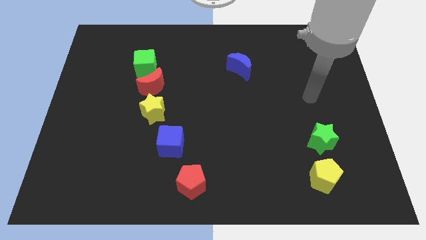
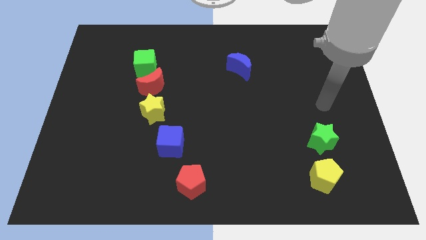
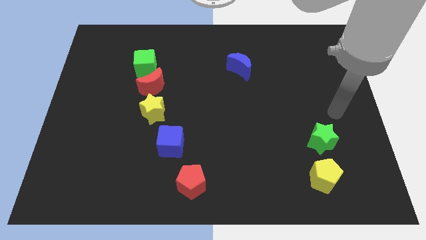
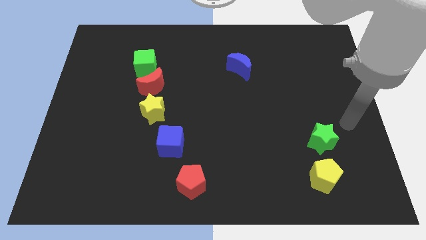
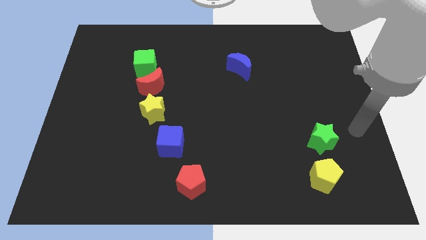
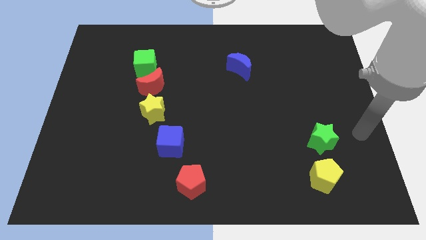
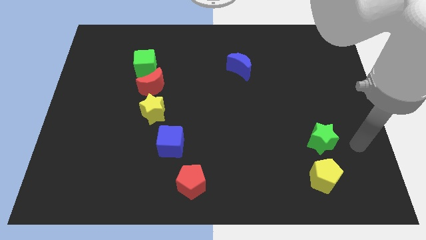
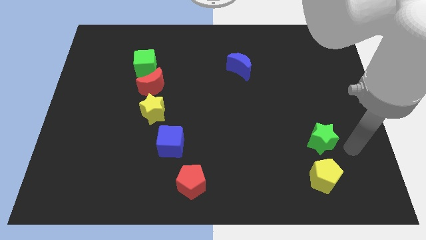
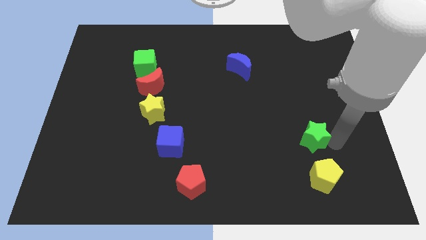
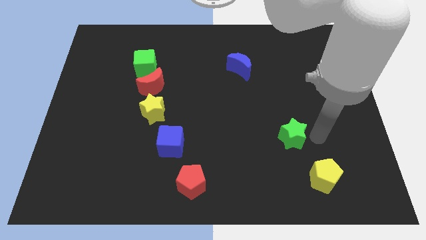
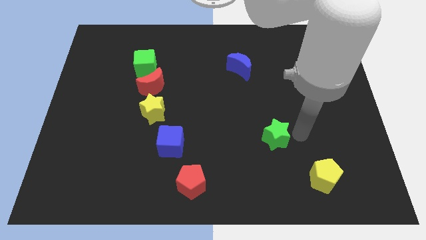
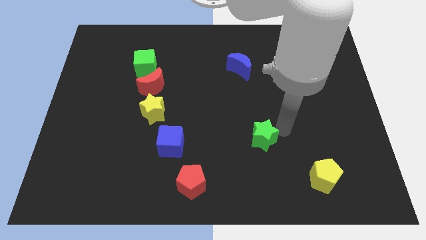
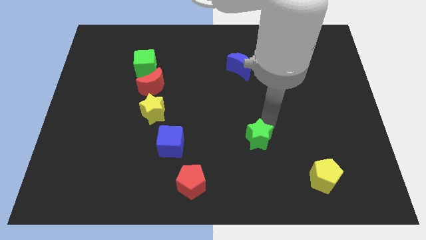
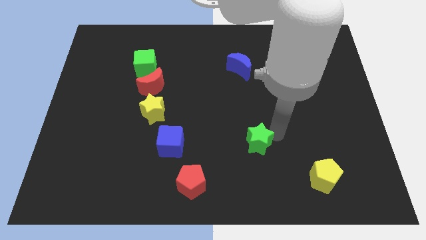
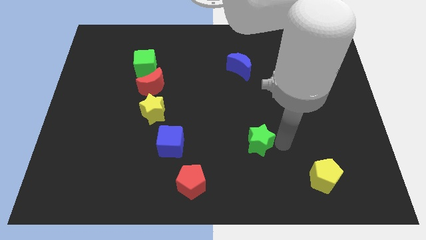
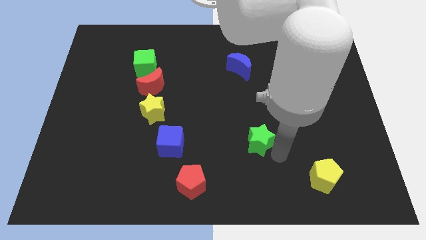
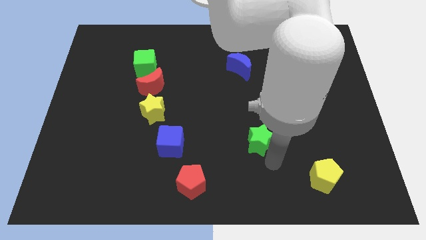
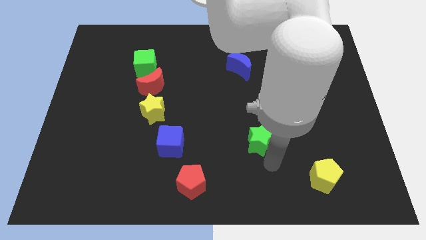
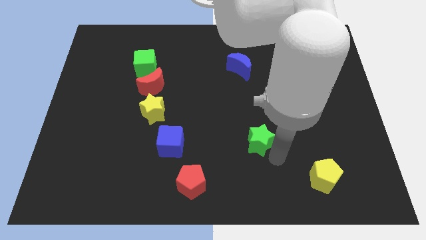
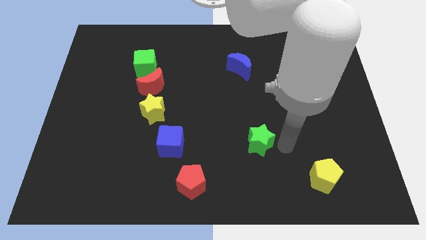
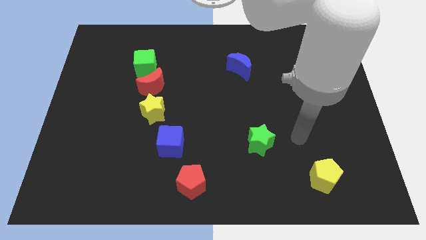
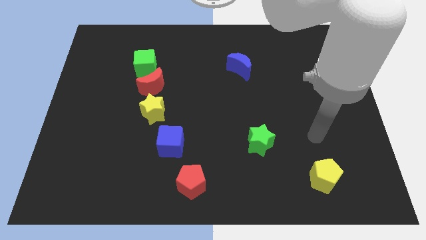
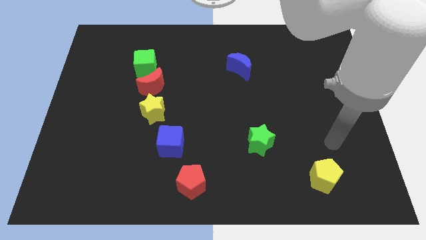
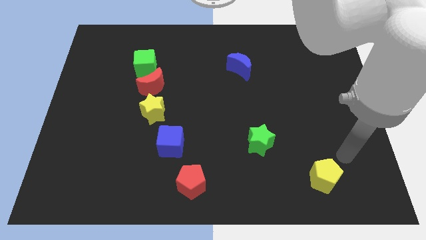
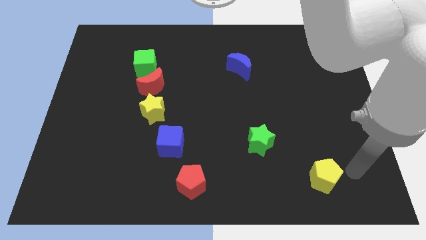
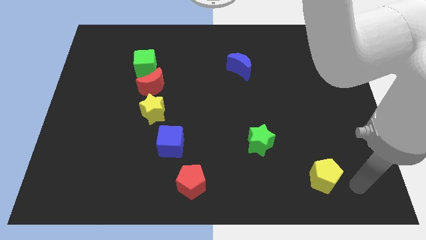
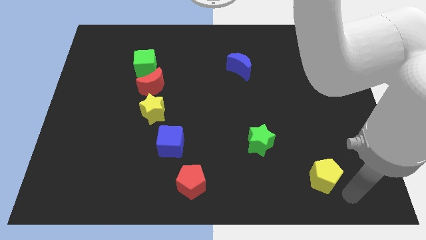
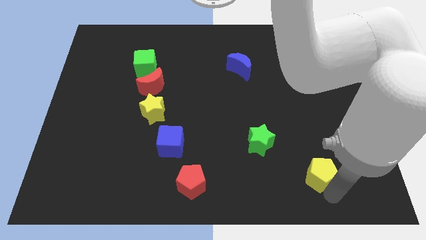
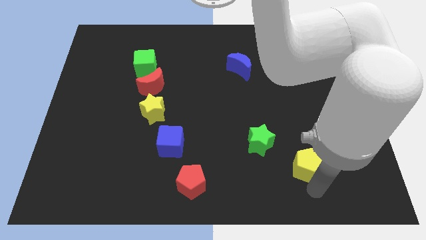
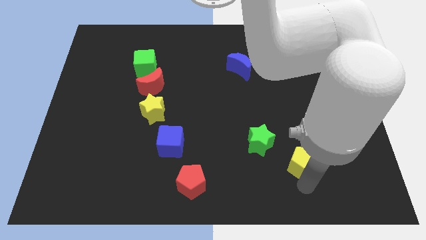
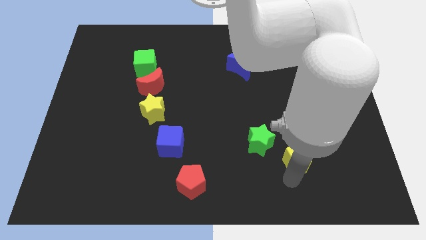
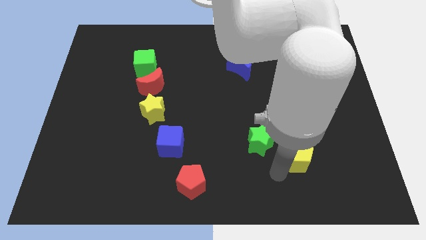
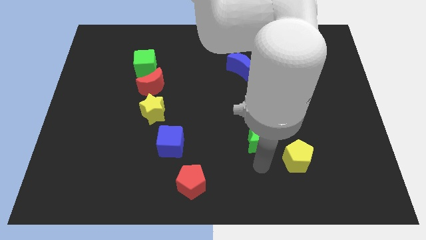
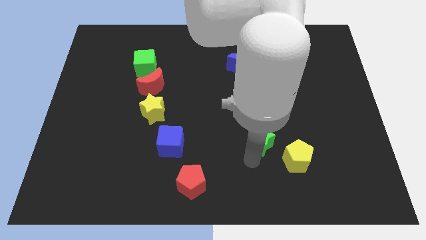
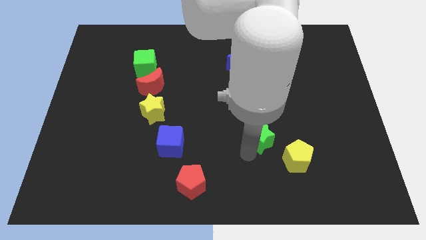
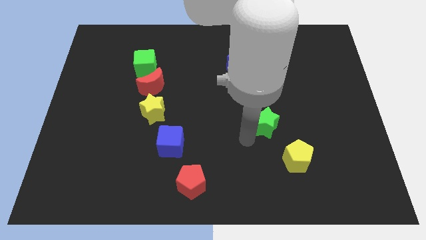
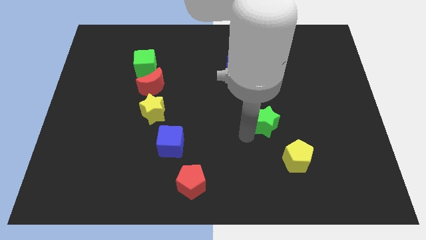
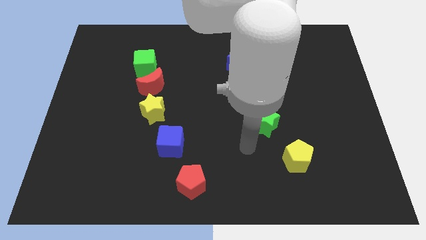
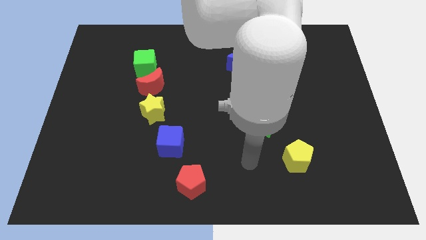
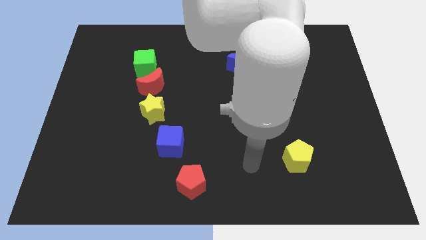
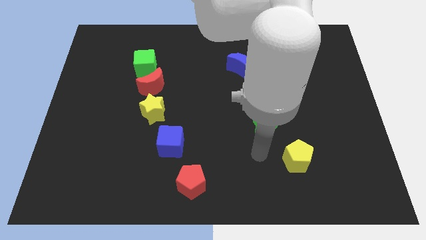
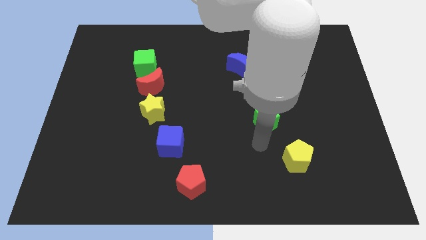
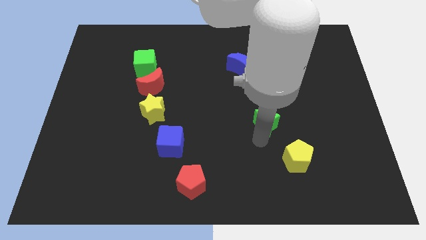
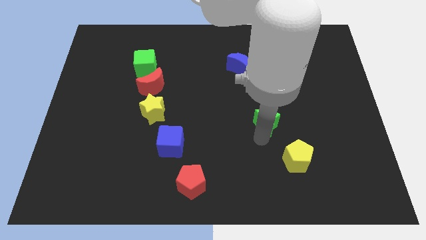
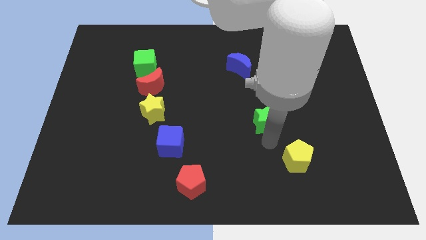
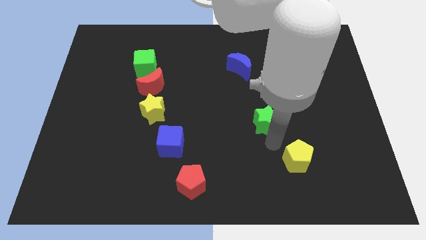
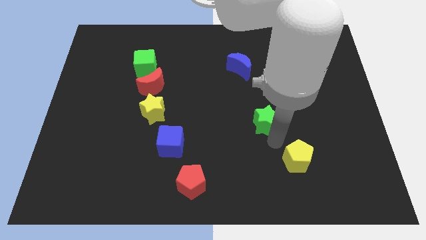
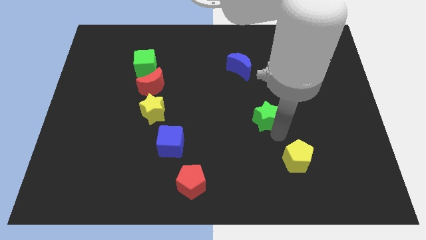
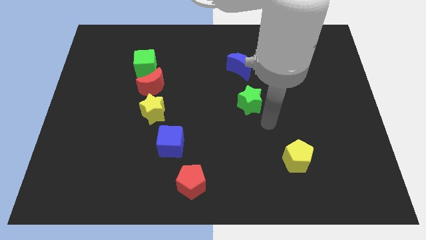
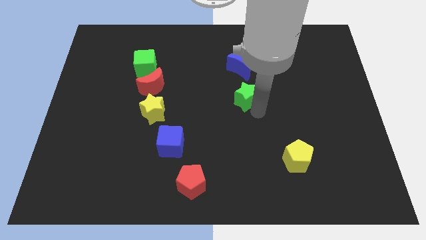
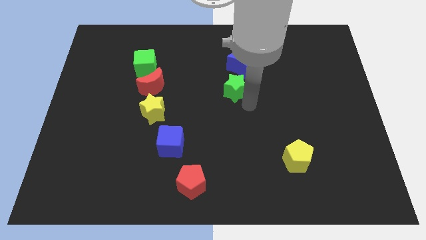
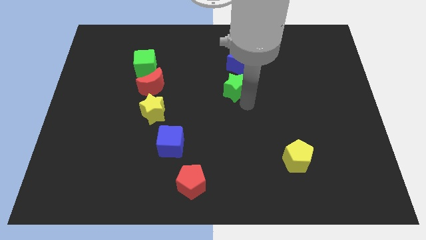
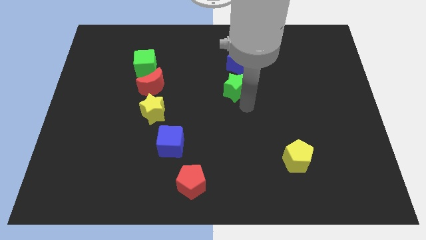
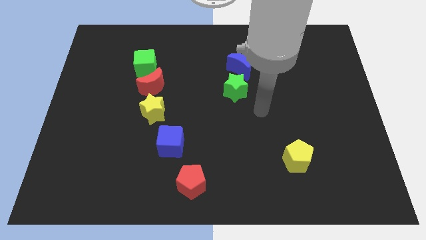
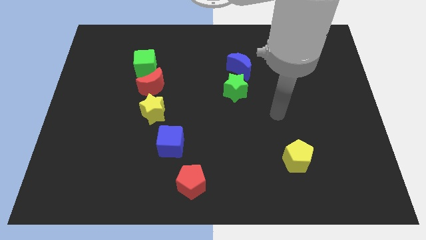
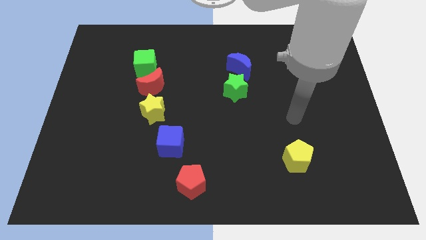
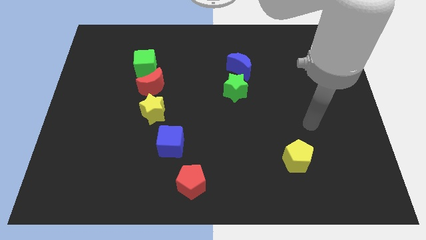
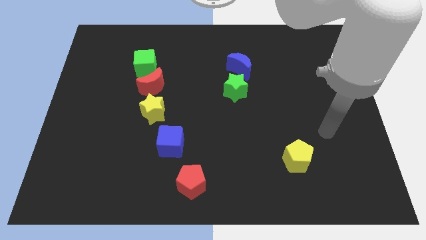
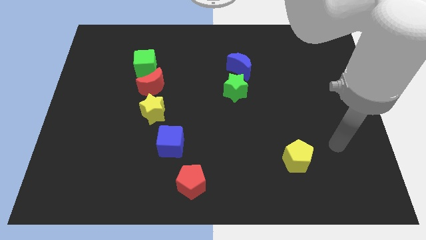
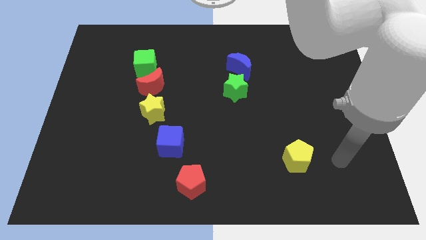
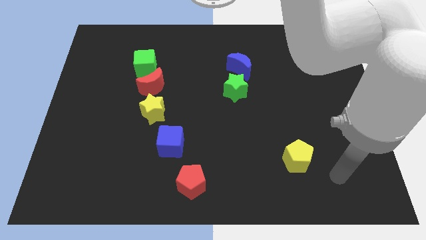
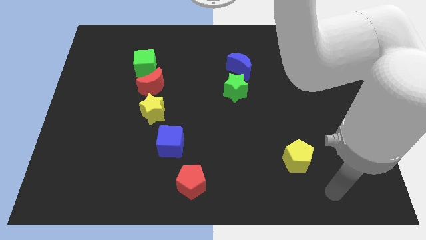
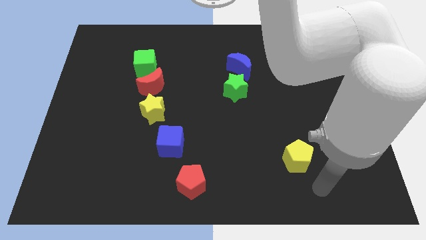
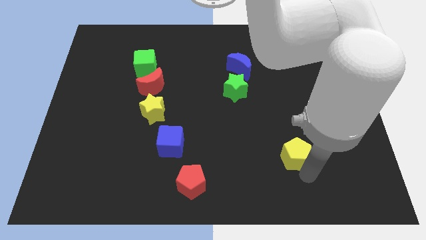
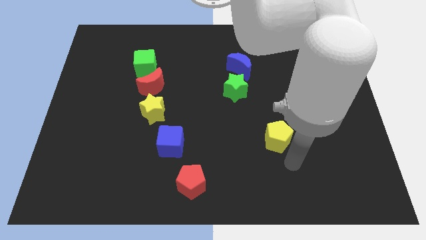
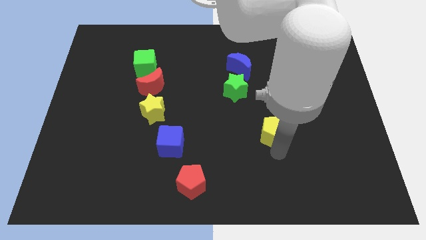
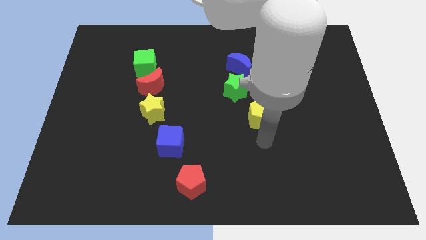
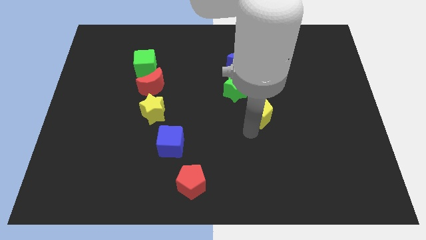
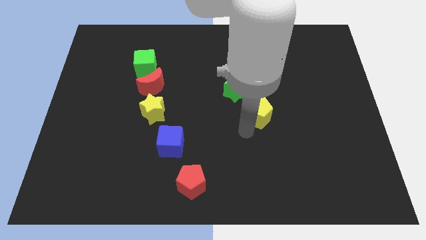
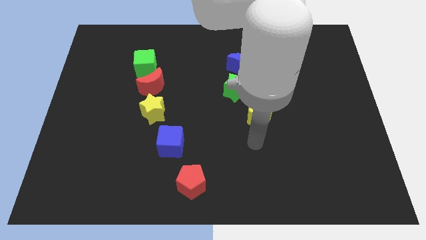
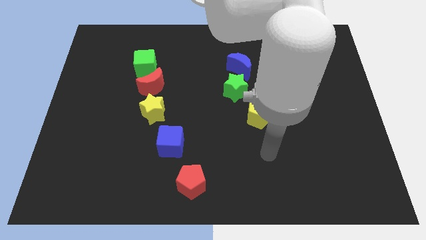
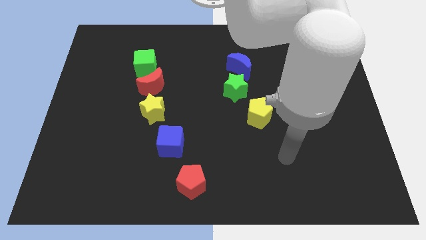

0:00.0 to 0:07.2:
move green star and the yellow pentagon close to the center of the board

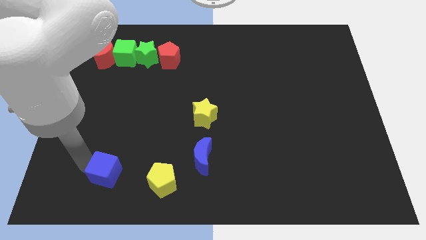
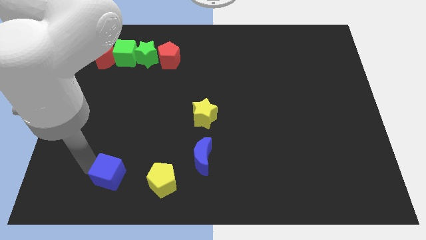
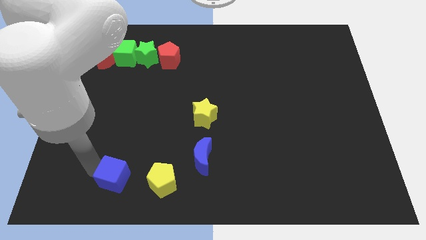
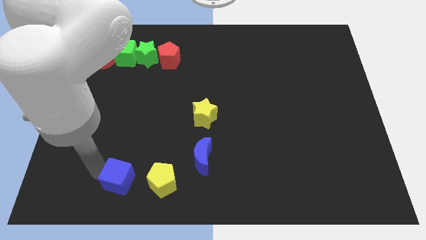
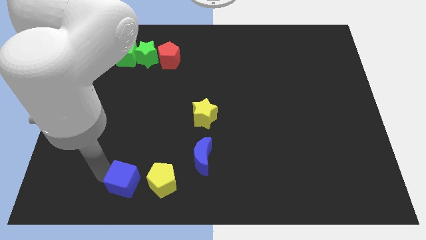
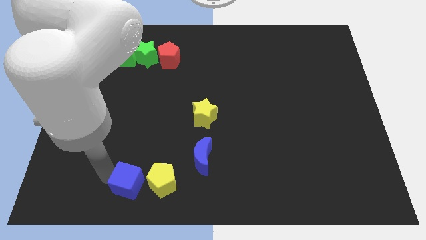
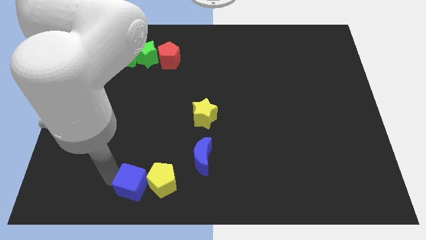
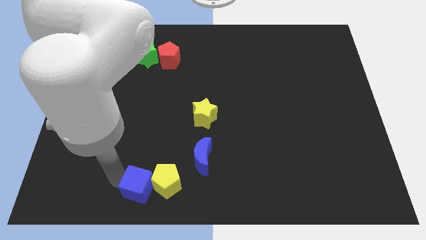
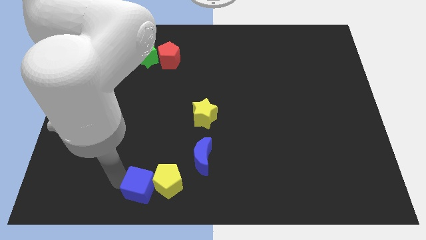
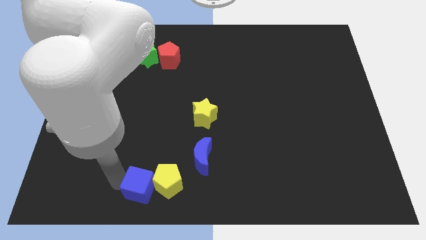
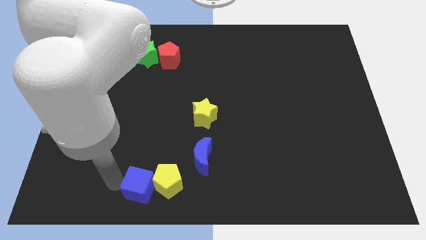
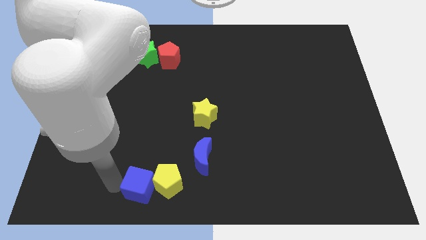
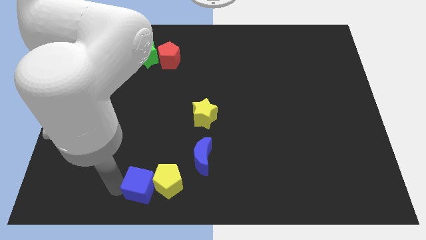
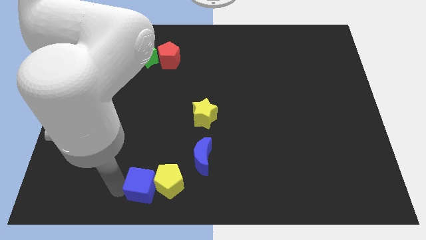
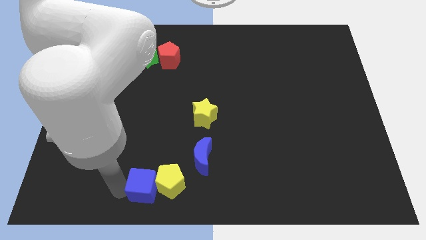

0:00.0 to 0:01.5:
push the blue cube into the yellow pentagon

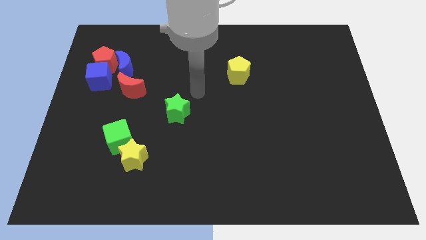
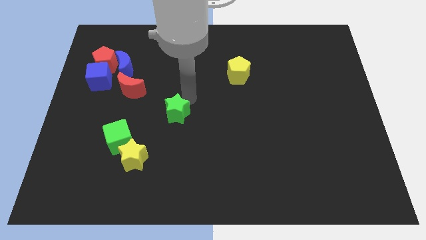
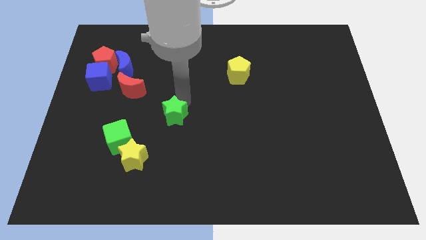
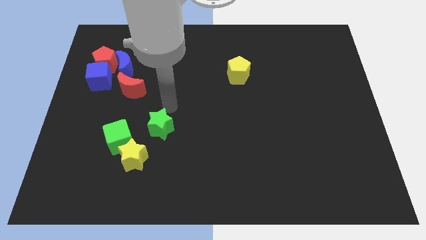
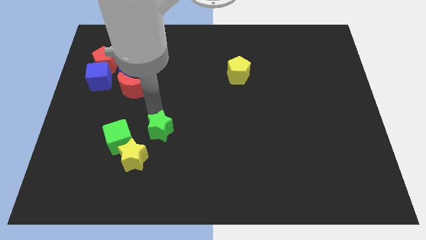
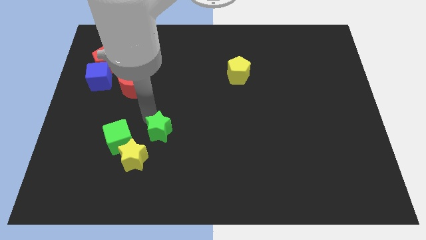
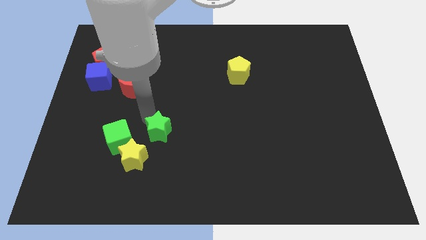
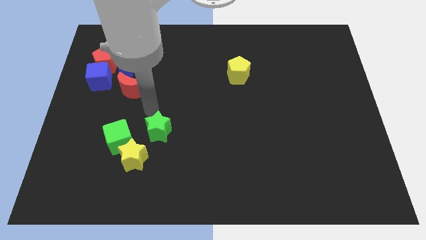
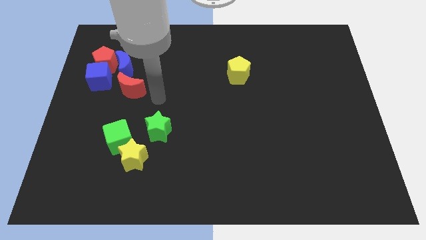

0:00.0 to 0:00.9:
place green star beside green cube
